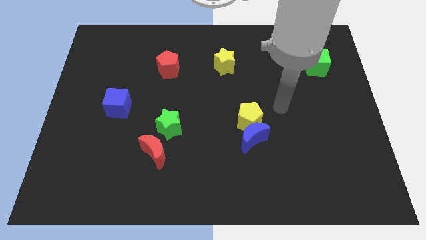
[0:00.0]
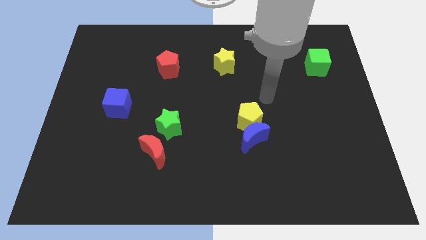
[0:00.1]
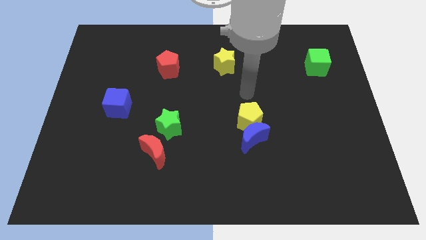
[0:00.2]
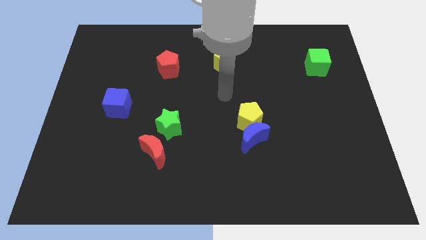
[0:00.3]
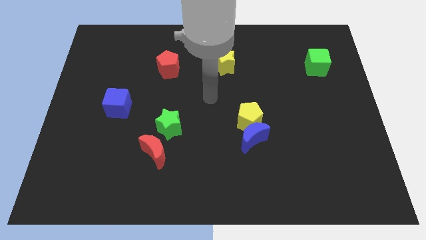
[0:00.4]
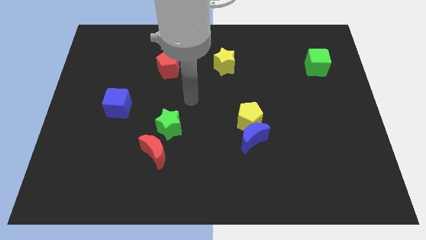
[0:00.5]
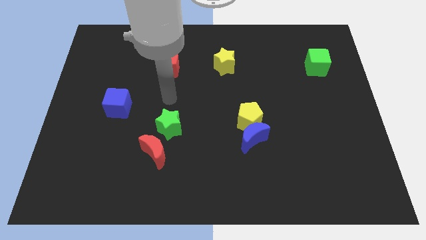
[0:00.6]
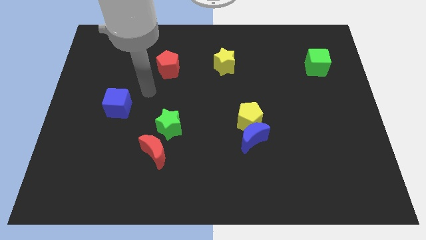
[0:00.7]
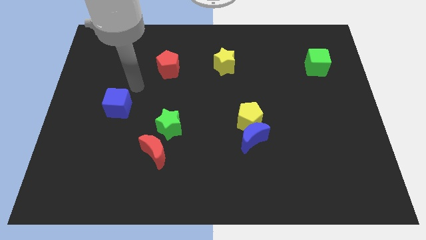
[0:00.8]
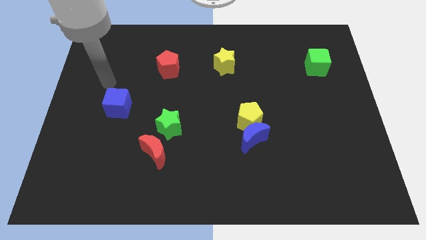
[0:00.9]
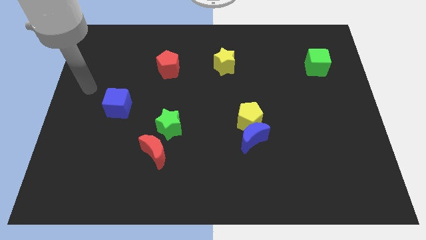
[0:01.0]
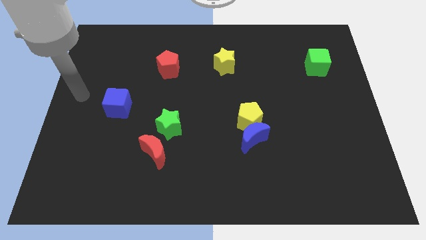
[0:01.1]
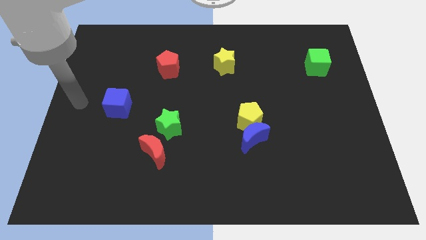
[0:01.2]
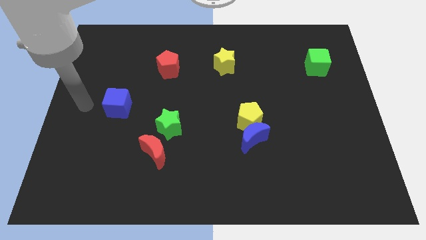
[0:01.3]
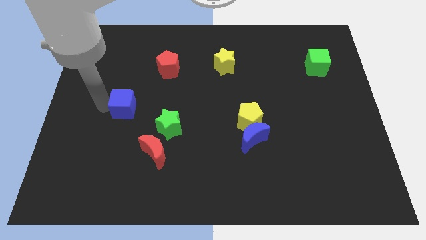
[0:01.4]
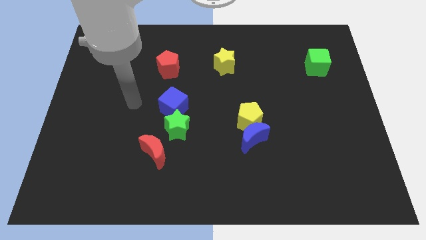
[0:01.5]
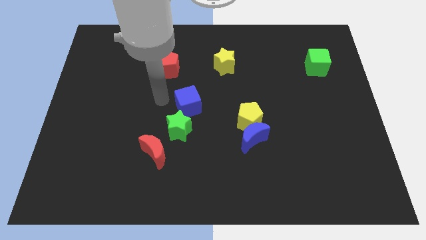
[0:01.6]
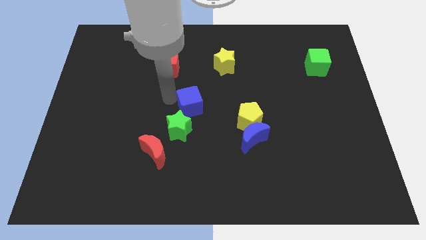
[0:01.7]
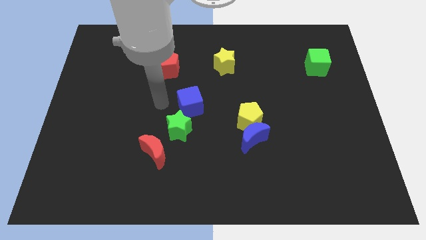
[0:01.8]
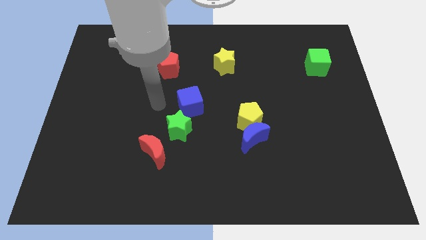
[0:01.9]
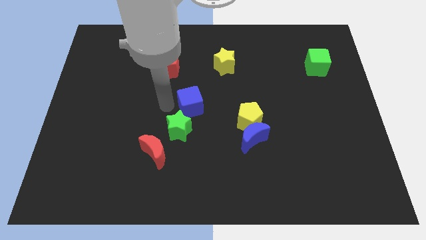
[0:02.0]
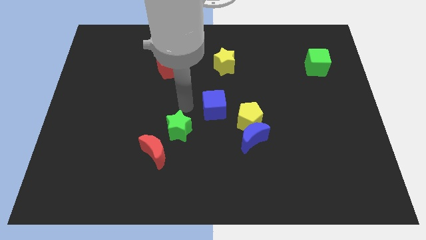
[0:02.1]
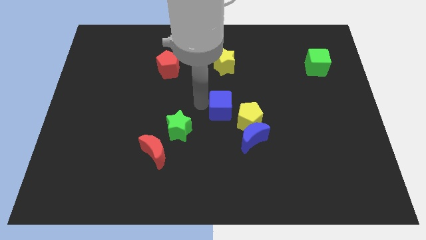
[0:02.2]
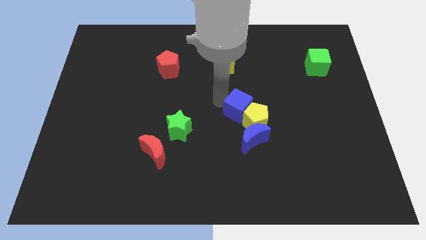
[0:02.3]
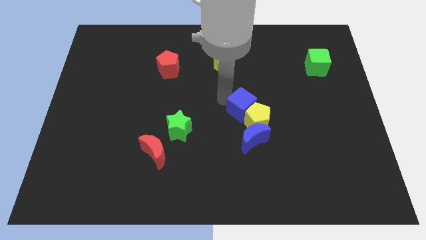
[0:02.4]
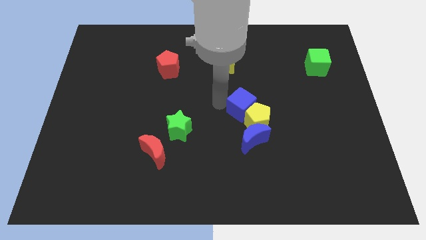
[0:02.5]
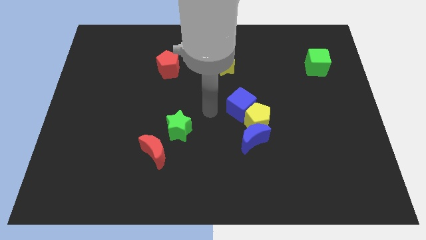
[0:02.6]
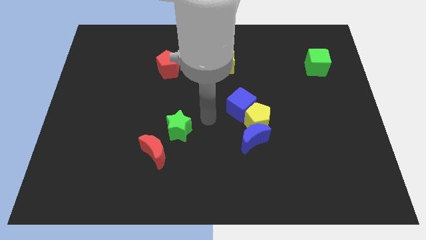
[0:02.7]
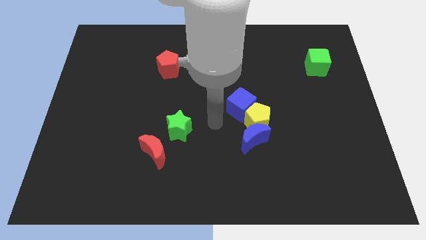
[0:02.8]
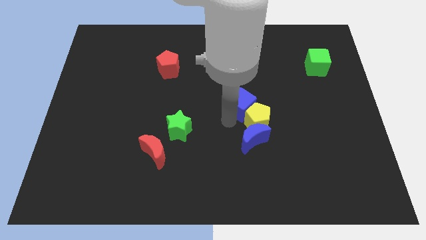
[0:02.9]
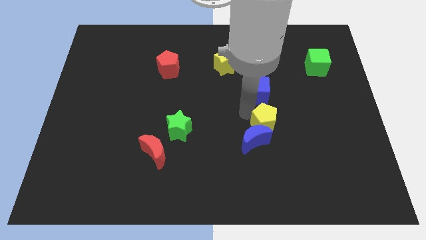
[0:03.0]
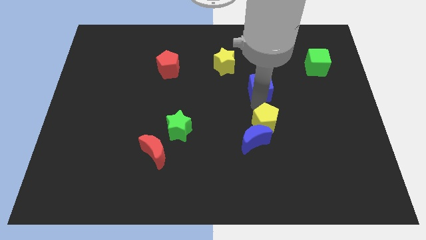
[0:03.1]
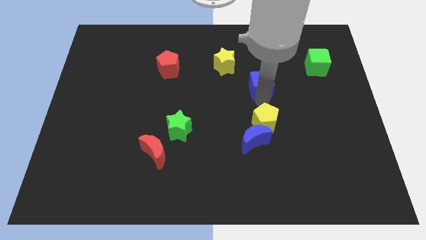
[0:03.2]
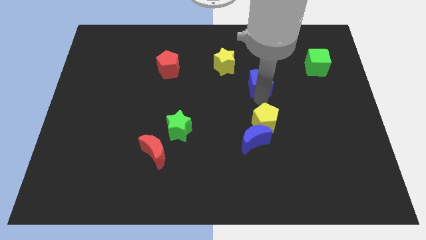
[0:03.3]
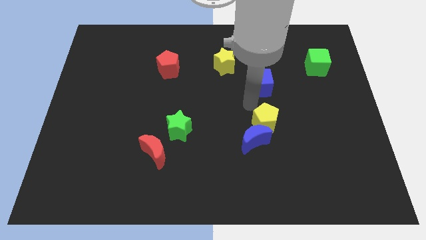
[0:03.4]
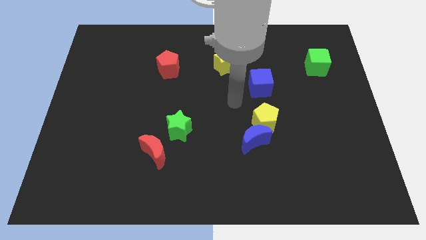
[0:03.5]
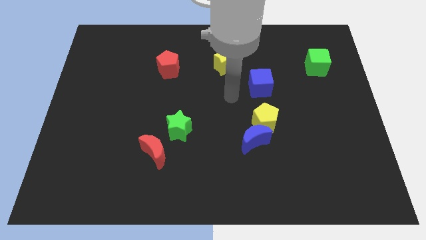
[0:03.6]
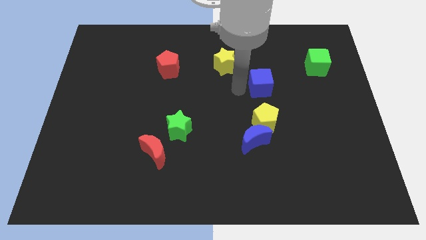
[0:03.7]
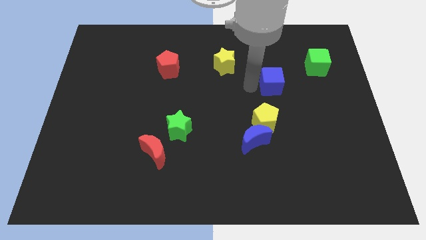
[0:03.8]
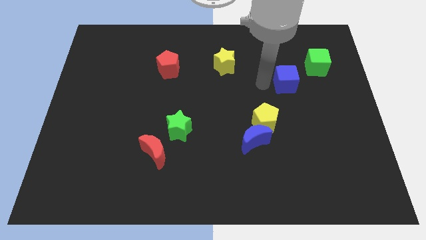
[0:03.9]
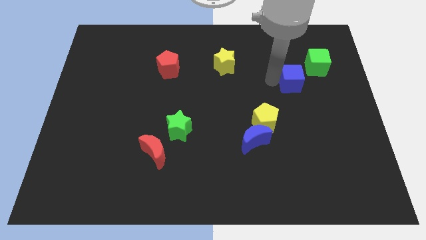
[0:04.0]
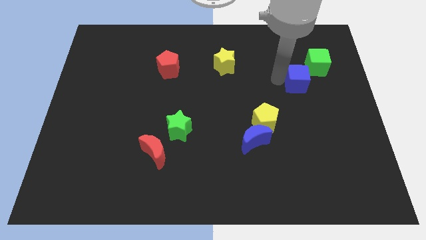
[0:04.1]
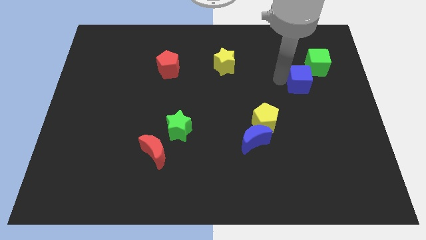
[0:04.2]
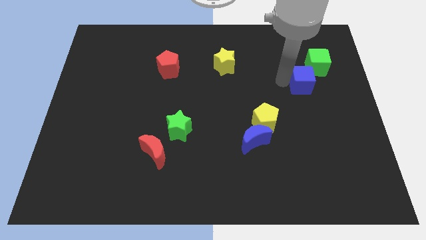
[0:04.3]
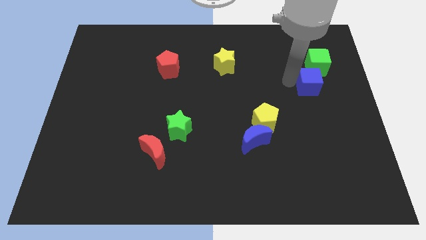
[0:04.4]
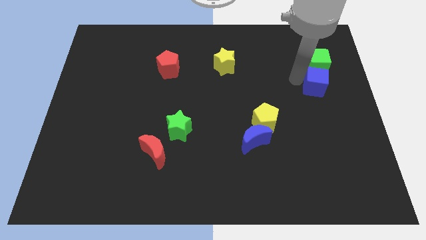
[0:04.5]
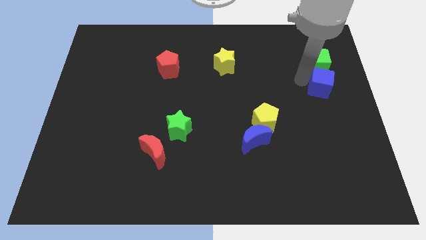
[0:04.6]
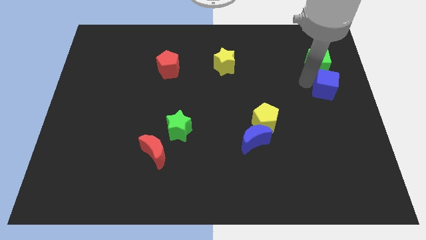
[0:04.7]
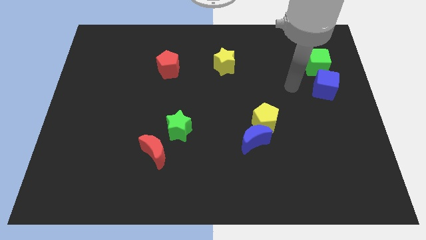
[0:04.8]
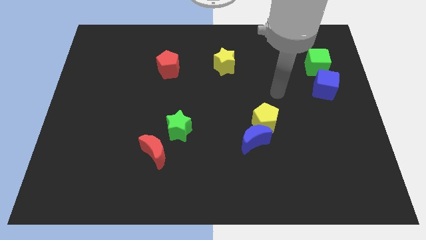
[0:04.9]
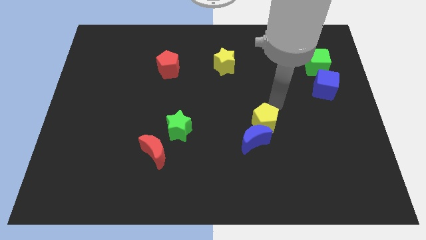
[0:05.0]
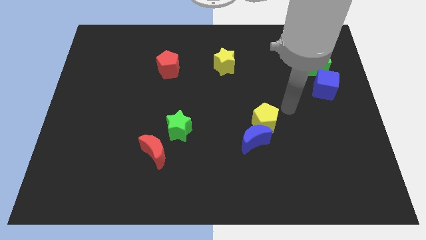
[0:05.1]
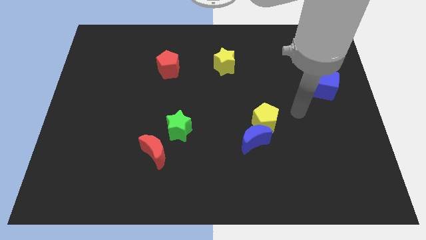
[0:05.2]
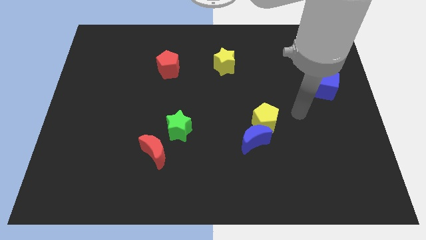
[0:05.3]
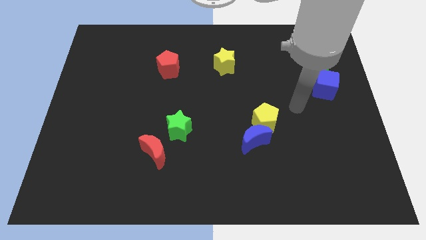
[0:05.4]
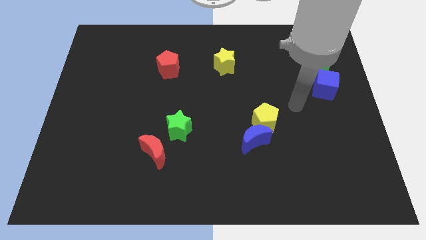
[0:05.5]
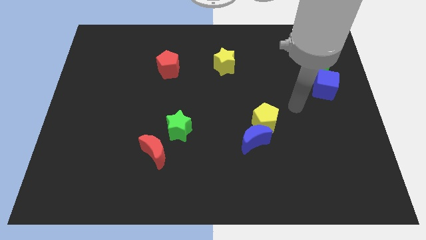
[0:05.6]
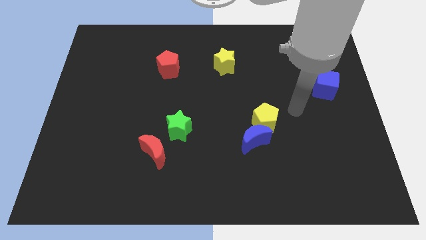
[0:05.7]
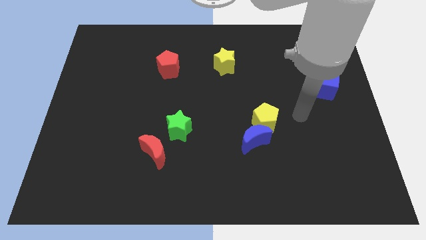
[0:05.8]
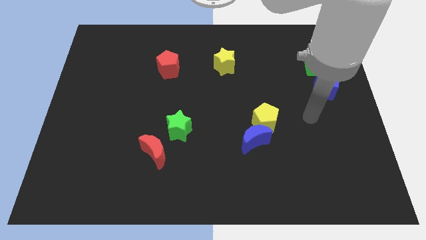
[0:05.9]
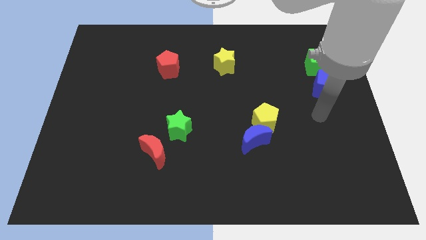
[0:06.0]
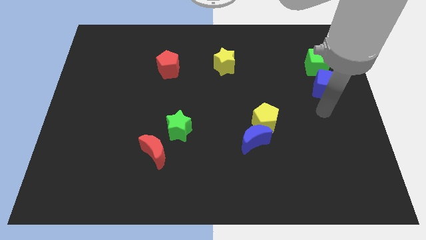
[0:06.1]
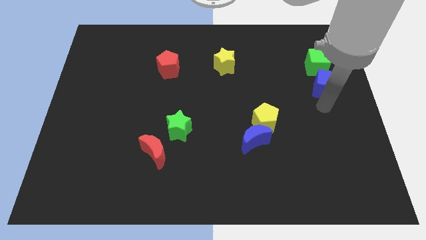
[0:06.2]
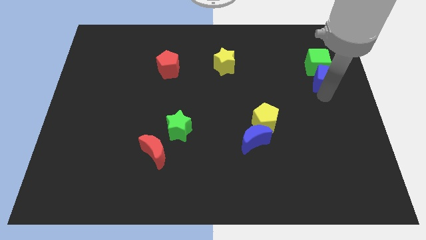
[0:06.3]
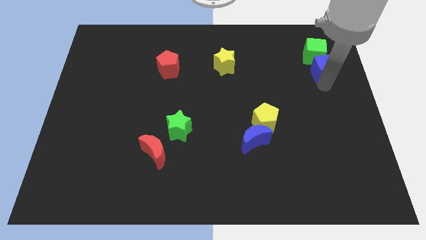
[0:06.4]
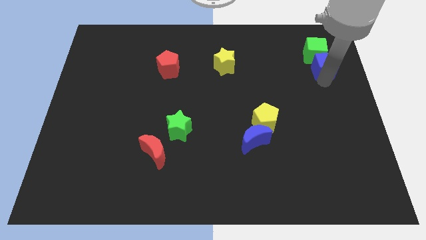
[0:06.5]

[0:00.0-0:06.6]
slide the blue cube close to the green cube

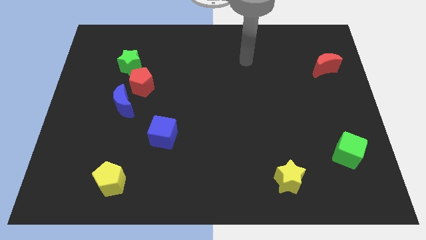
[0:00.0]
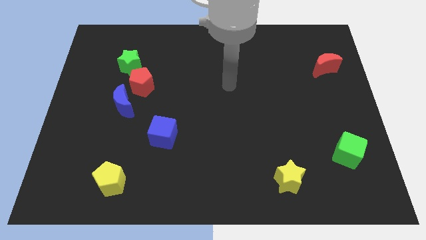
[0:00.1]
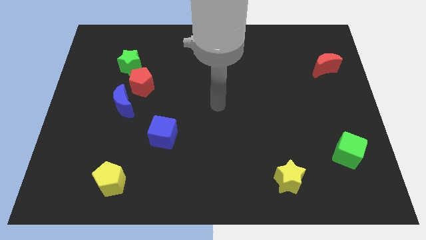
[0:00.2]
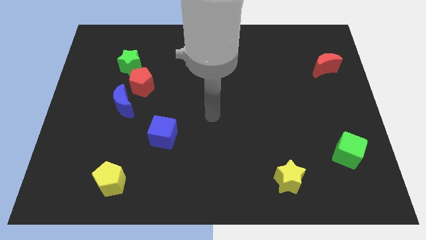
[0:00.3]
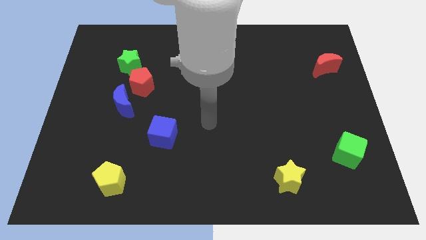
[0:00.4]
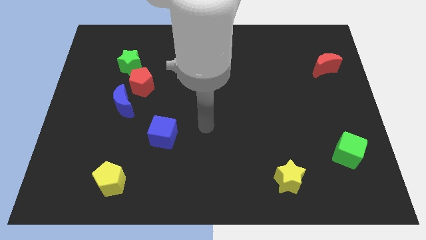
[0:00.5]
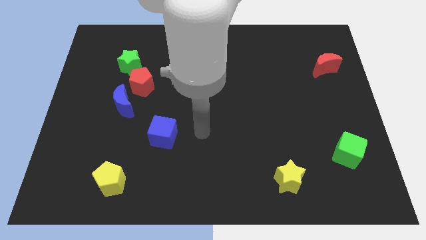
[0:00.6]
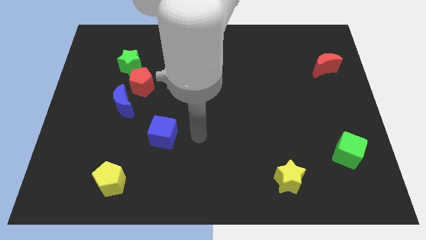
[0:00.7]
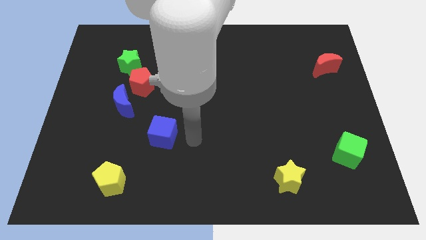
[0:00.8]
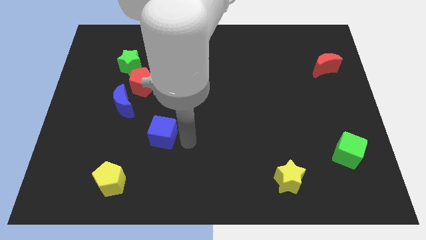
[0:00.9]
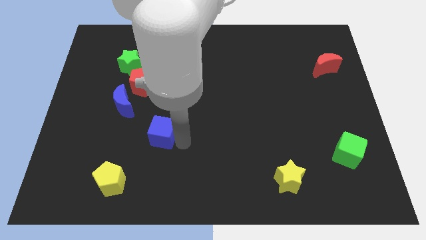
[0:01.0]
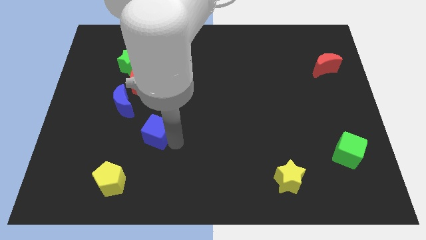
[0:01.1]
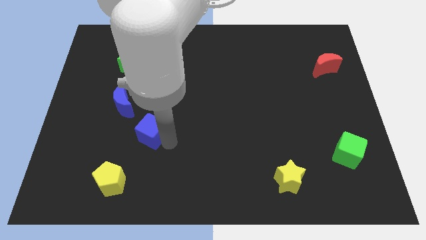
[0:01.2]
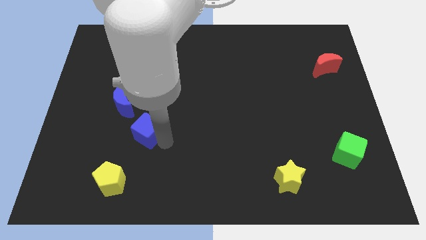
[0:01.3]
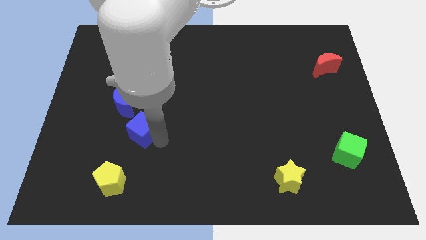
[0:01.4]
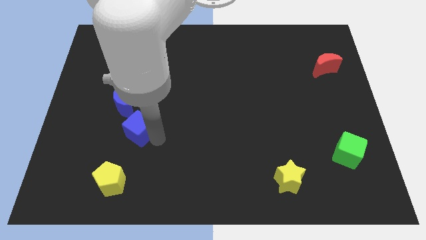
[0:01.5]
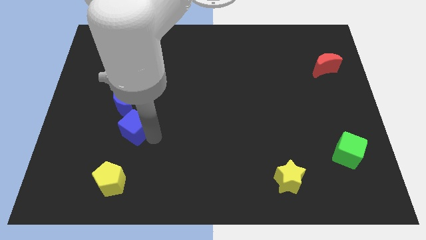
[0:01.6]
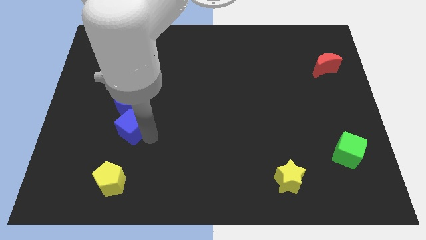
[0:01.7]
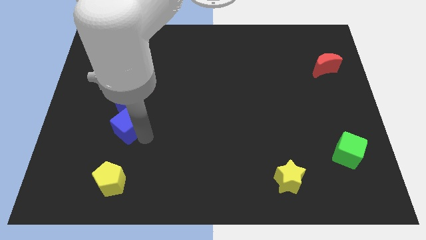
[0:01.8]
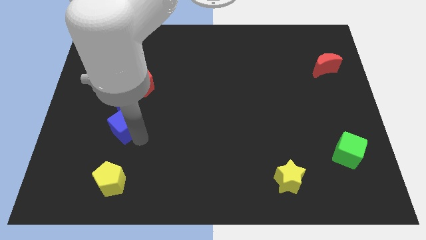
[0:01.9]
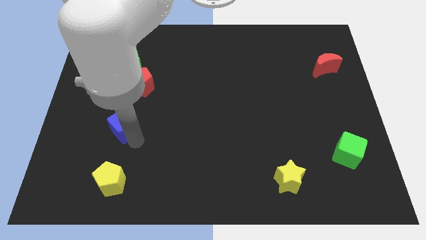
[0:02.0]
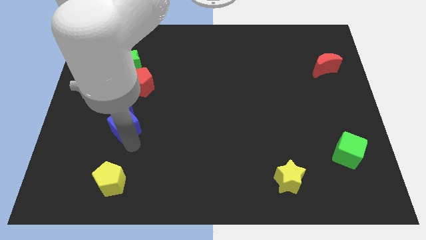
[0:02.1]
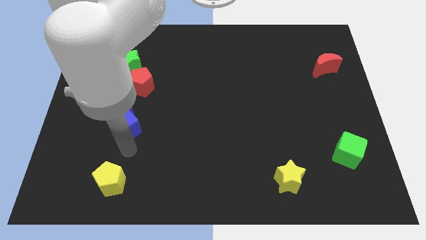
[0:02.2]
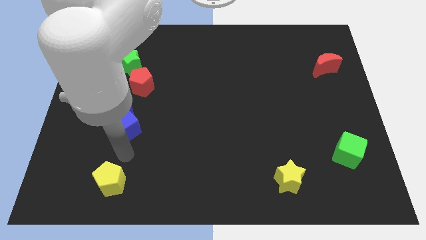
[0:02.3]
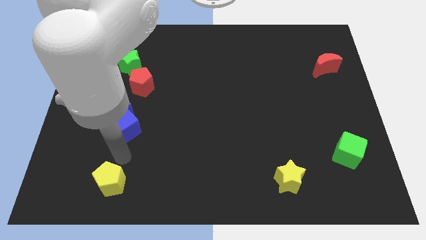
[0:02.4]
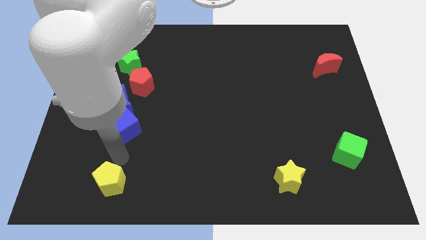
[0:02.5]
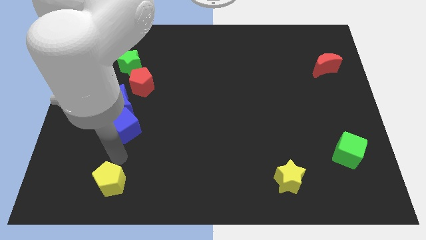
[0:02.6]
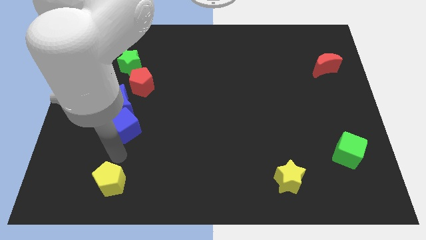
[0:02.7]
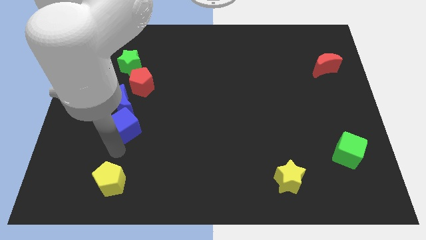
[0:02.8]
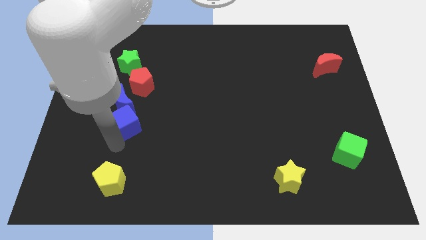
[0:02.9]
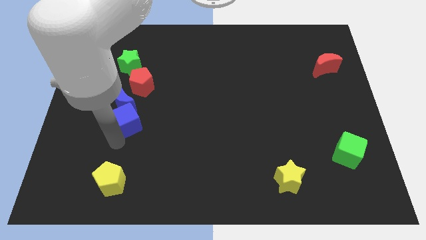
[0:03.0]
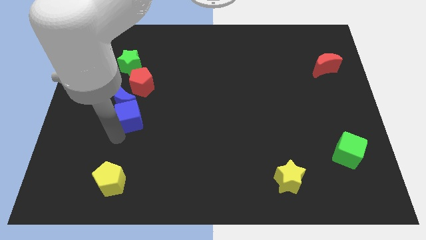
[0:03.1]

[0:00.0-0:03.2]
push the blue cube towards the blue moon
